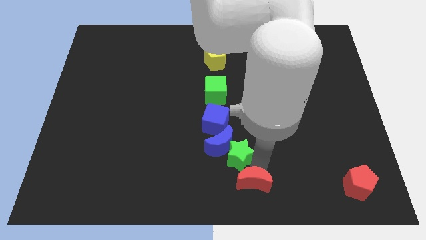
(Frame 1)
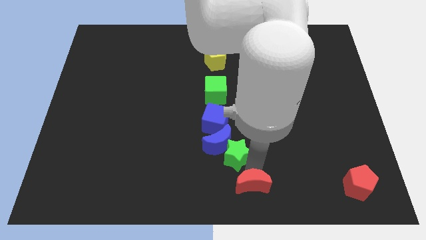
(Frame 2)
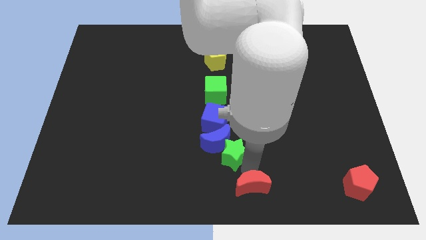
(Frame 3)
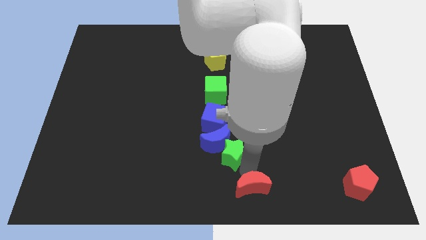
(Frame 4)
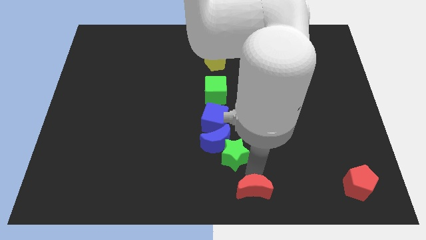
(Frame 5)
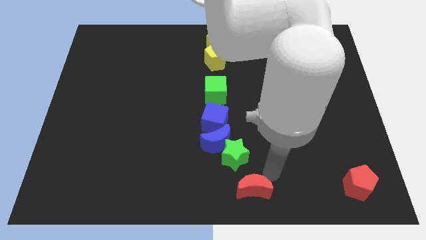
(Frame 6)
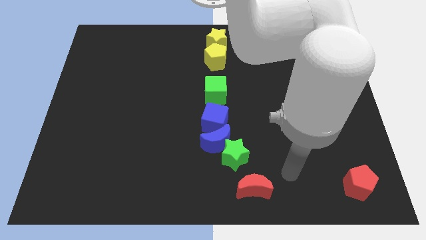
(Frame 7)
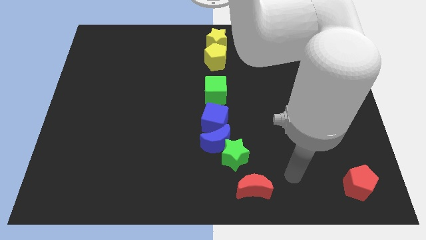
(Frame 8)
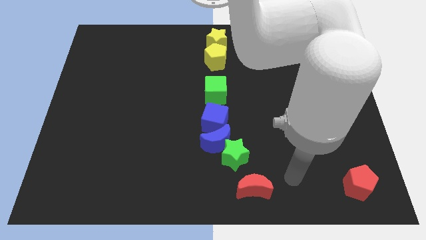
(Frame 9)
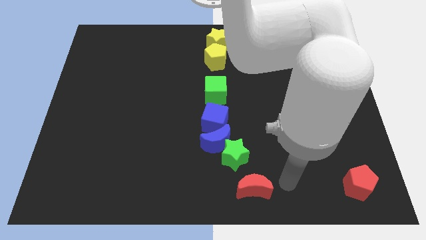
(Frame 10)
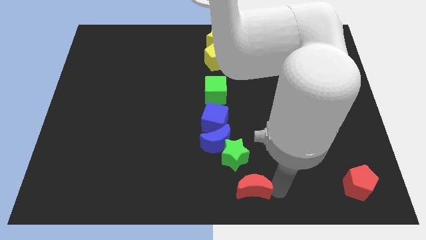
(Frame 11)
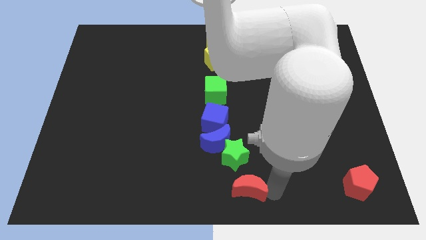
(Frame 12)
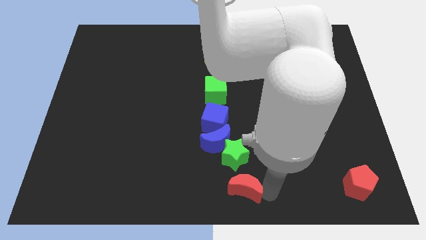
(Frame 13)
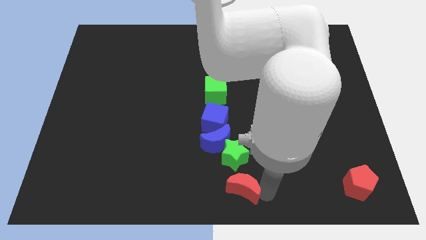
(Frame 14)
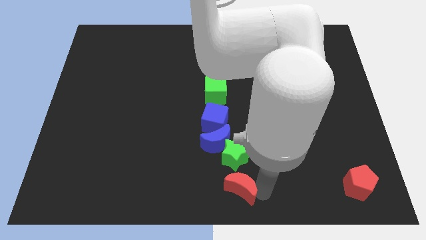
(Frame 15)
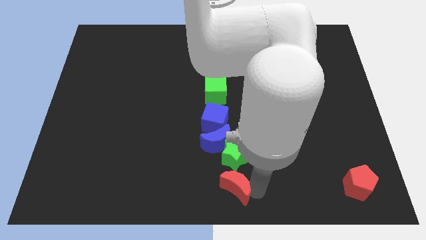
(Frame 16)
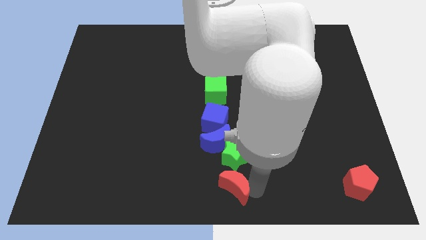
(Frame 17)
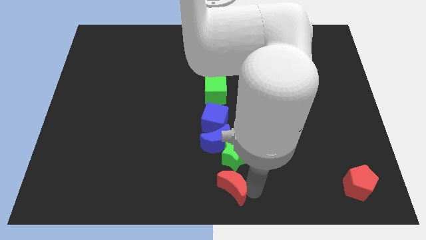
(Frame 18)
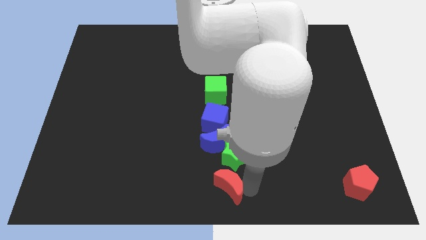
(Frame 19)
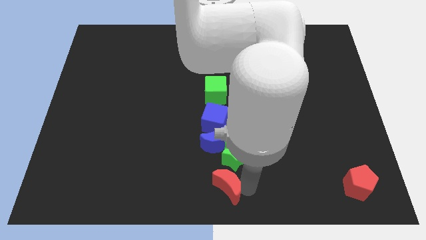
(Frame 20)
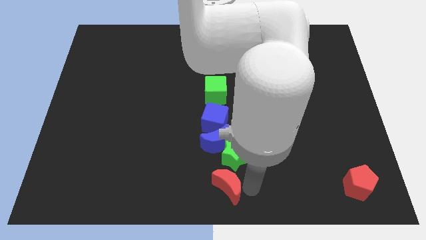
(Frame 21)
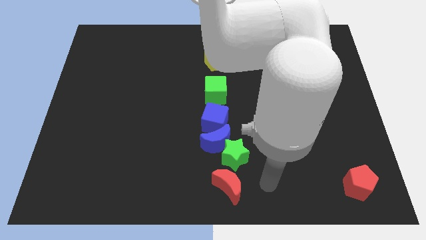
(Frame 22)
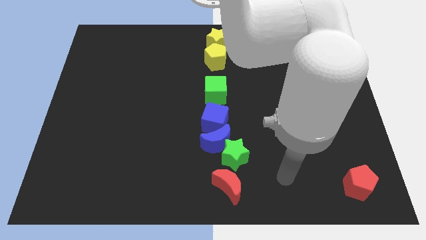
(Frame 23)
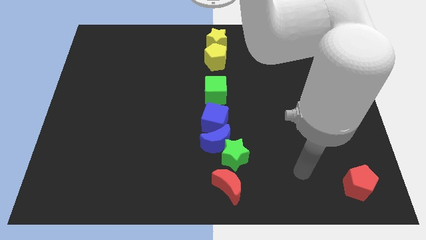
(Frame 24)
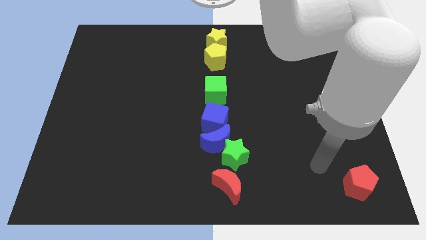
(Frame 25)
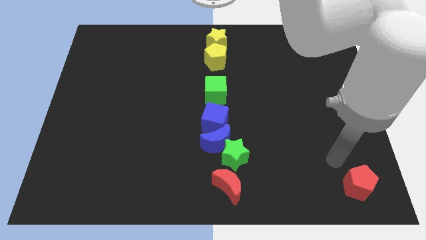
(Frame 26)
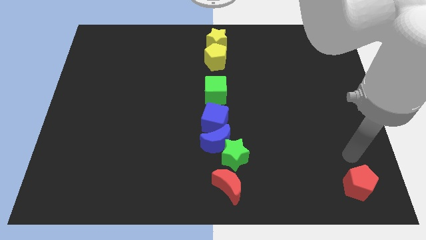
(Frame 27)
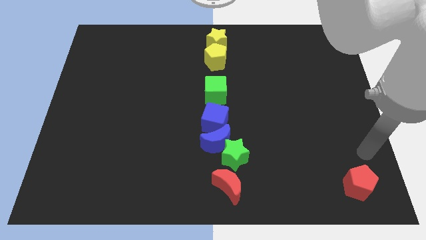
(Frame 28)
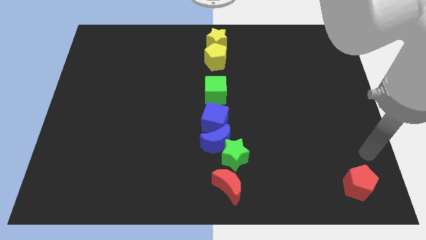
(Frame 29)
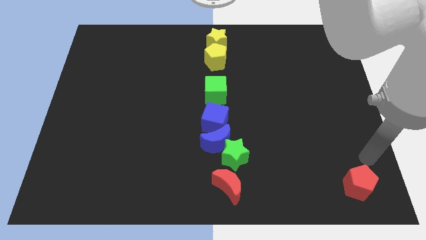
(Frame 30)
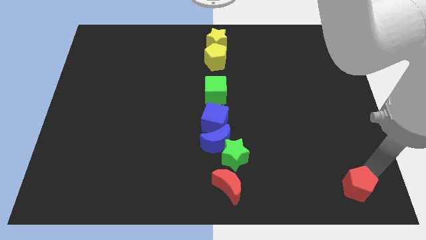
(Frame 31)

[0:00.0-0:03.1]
move the red crescent vertically below the group of blocks

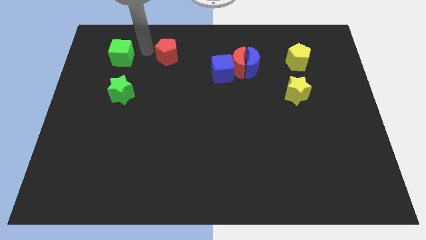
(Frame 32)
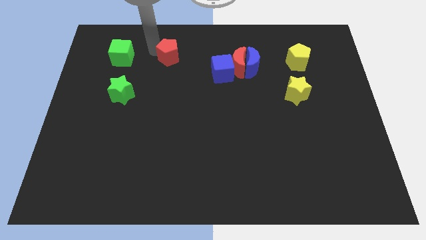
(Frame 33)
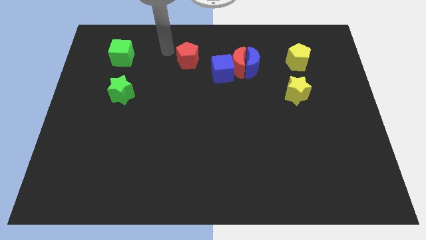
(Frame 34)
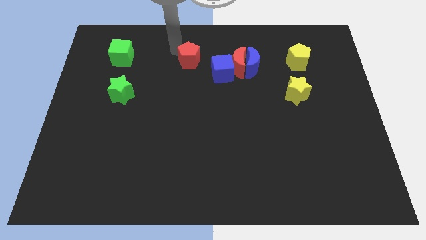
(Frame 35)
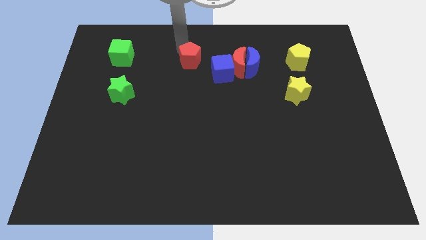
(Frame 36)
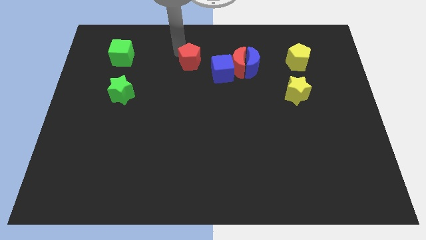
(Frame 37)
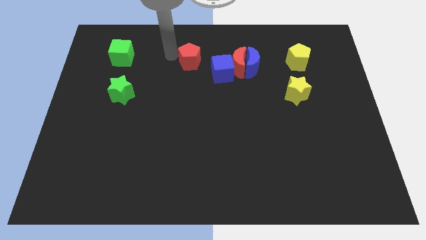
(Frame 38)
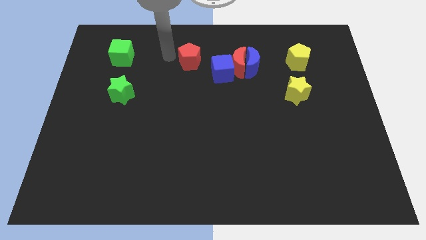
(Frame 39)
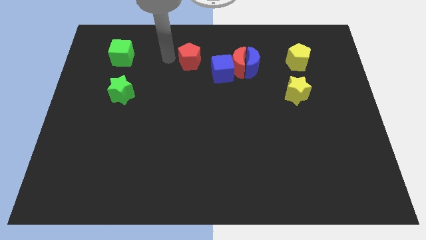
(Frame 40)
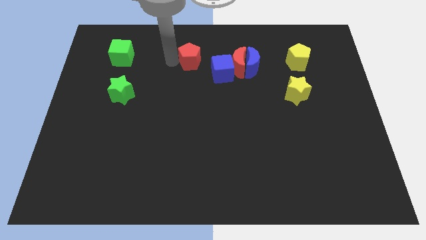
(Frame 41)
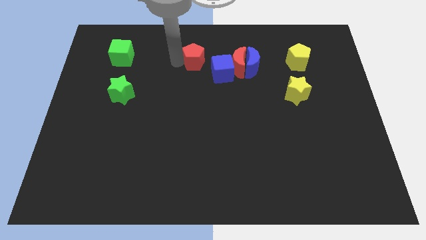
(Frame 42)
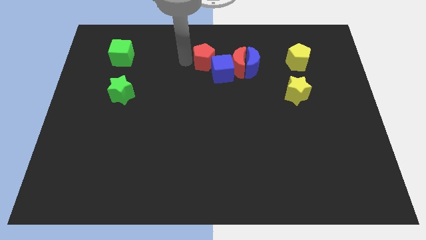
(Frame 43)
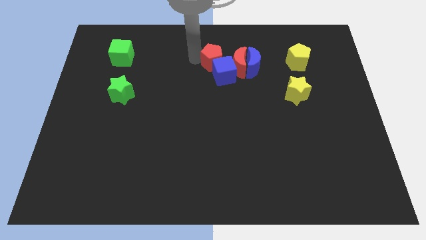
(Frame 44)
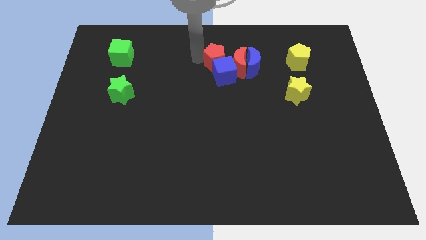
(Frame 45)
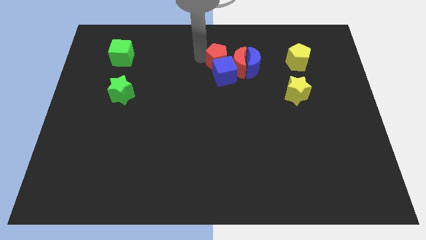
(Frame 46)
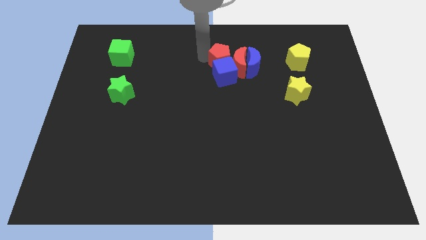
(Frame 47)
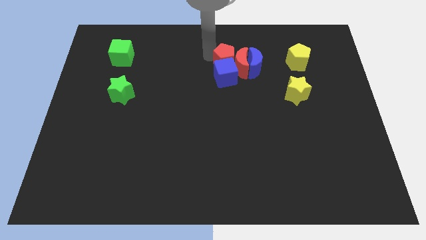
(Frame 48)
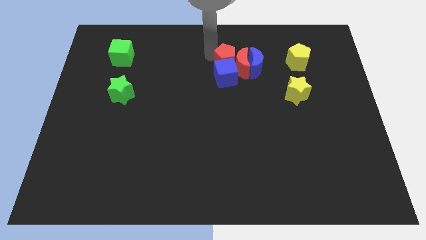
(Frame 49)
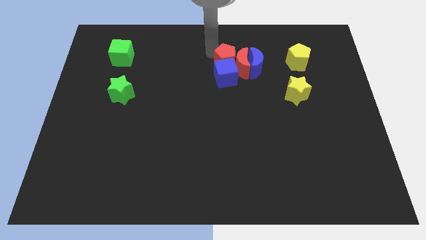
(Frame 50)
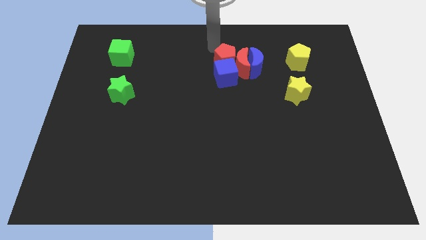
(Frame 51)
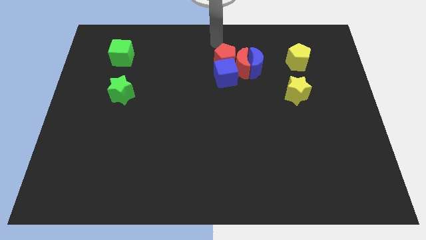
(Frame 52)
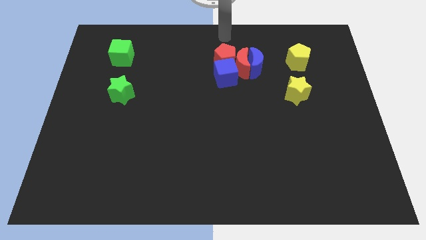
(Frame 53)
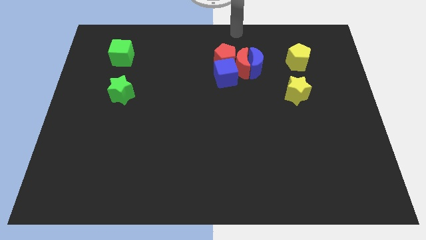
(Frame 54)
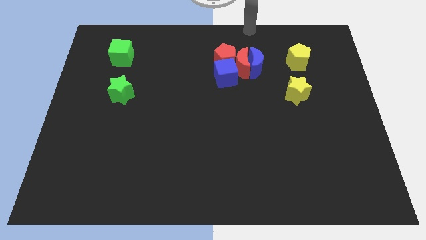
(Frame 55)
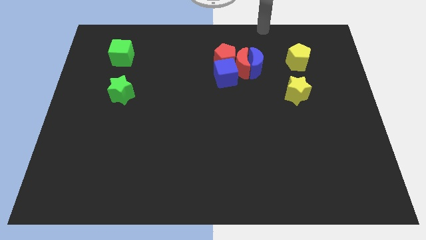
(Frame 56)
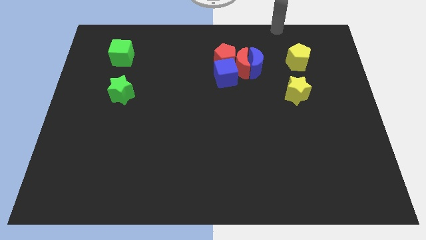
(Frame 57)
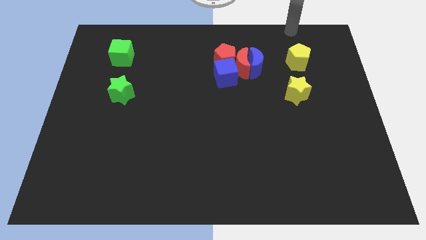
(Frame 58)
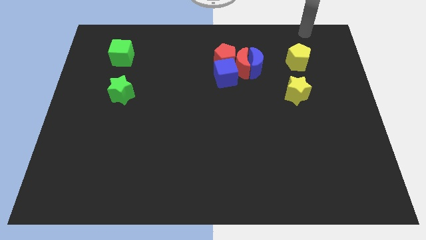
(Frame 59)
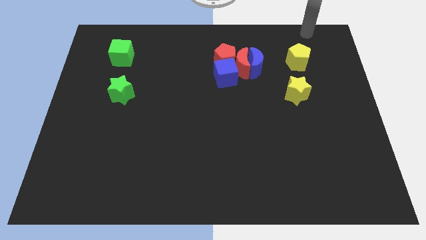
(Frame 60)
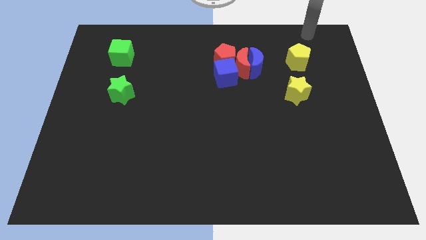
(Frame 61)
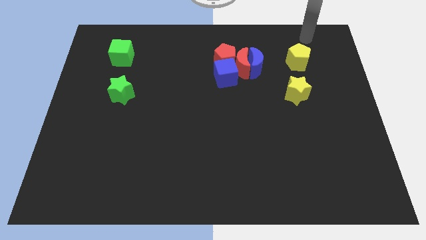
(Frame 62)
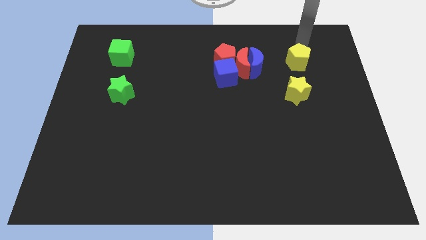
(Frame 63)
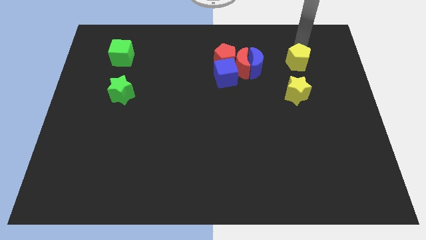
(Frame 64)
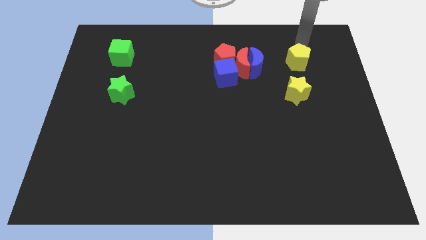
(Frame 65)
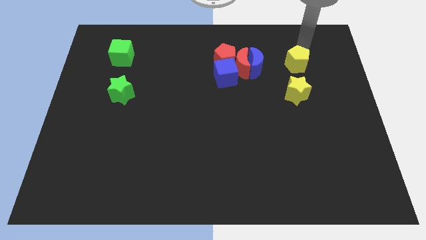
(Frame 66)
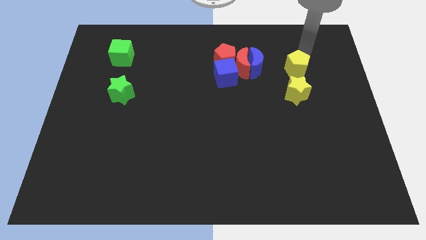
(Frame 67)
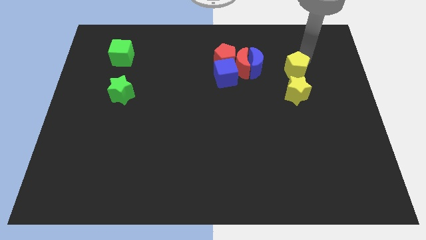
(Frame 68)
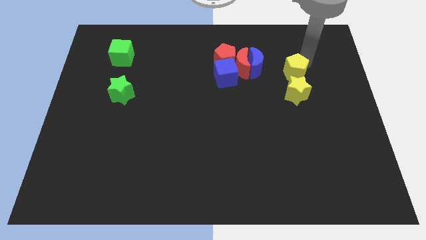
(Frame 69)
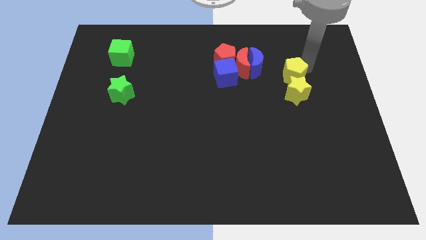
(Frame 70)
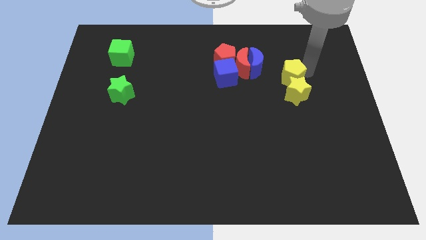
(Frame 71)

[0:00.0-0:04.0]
move the yellow pentagon close to the yellow star

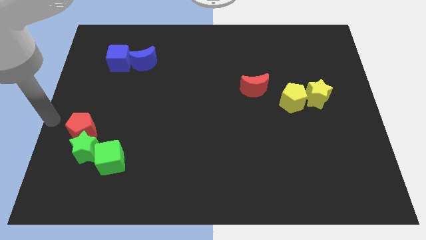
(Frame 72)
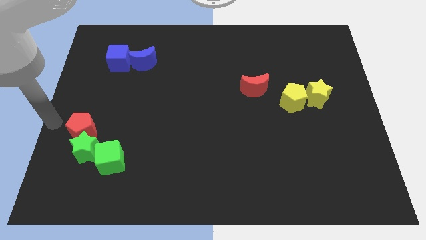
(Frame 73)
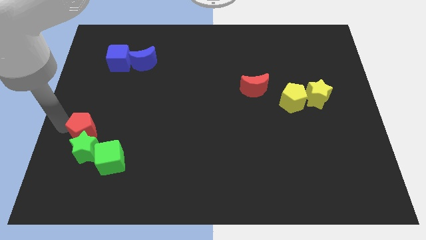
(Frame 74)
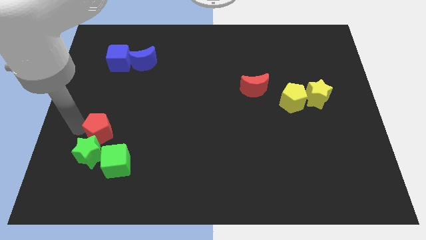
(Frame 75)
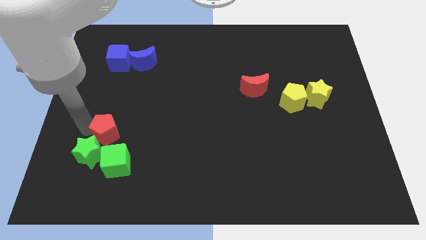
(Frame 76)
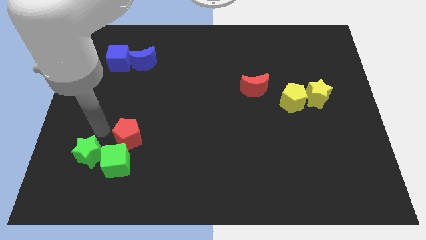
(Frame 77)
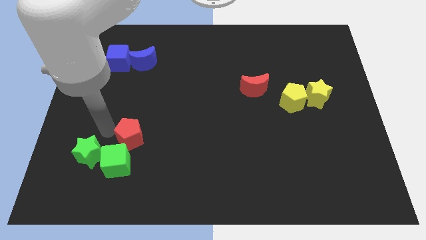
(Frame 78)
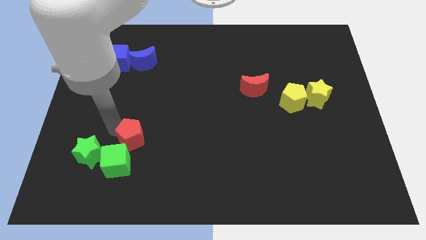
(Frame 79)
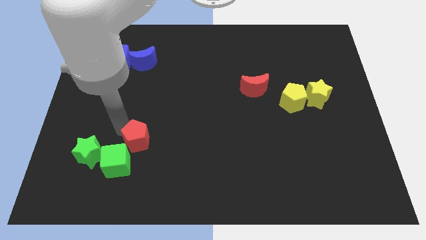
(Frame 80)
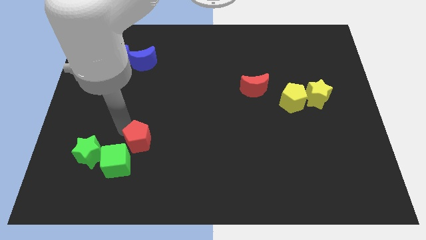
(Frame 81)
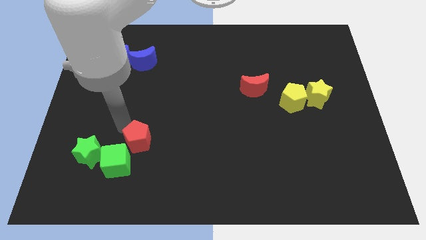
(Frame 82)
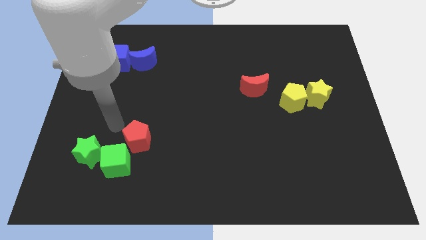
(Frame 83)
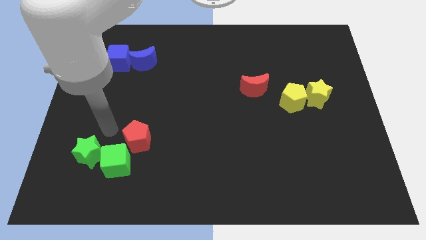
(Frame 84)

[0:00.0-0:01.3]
push the red pentagon to the top right of the green cube

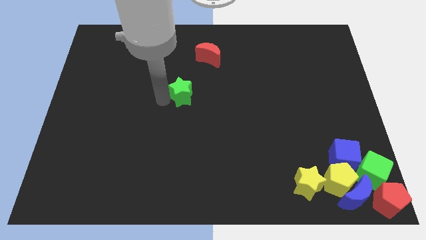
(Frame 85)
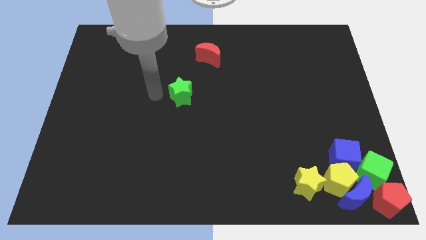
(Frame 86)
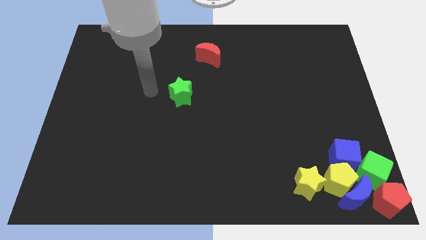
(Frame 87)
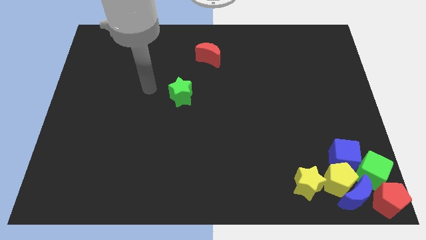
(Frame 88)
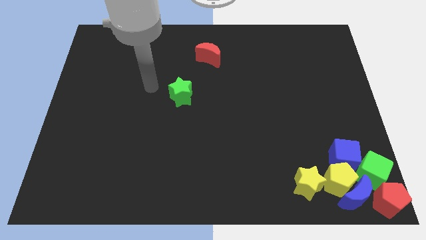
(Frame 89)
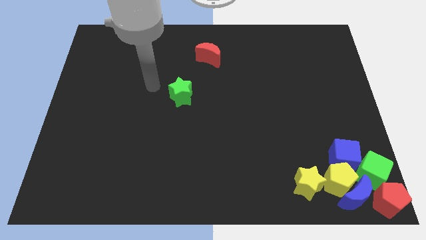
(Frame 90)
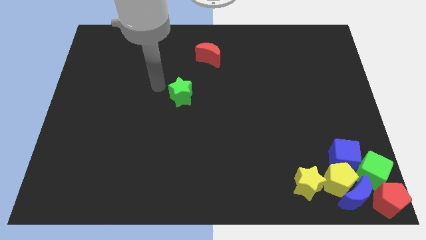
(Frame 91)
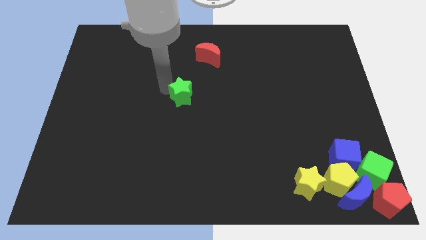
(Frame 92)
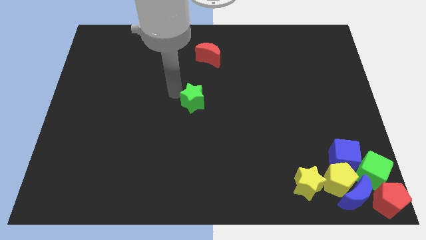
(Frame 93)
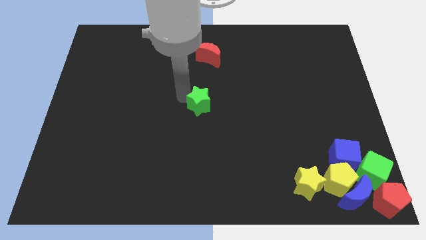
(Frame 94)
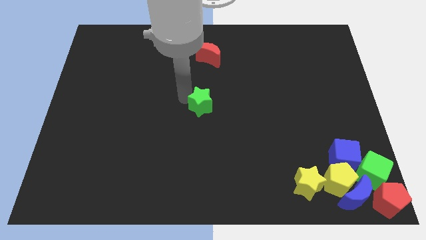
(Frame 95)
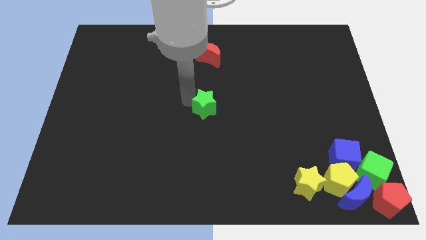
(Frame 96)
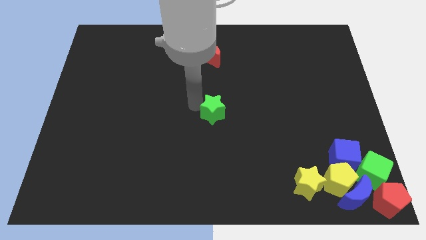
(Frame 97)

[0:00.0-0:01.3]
move the green star to the center of the board
